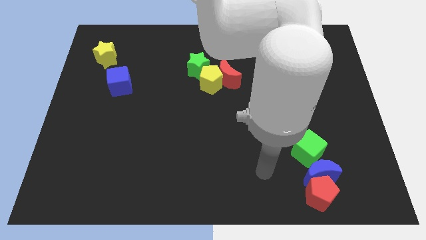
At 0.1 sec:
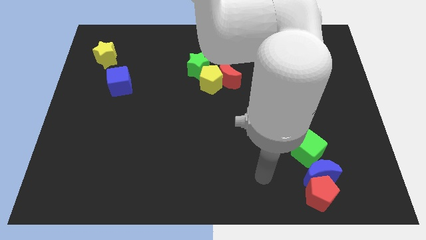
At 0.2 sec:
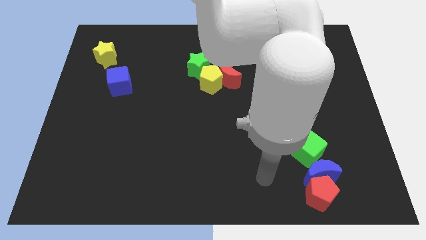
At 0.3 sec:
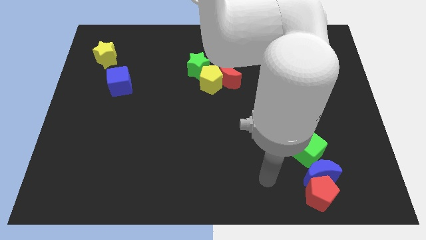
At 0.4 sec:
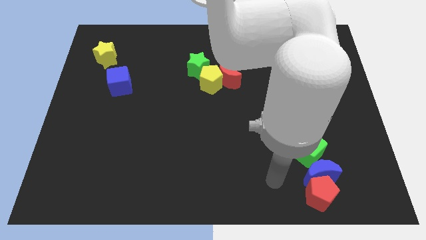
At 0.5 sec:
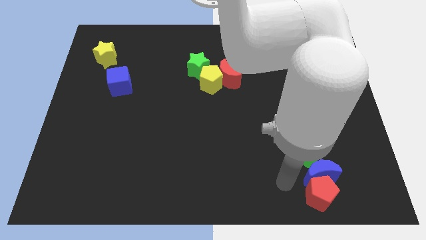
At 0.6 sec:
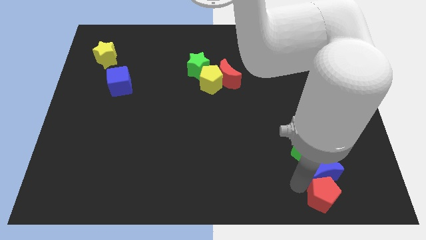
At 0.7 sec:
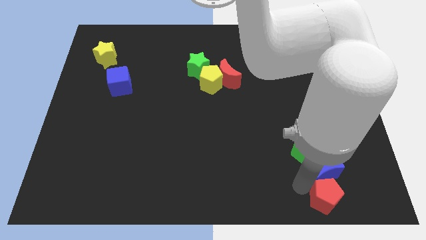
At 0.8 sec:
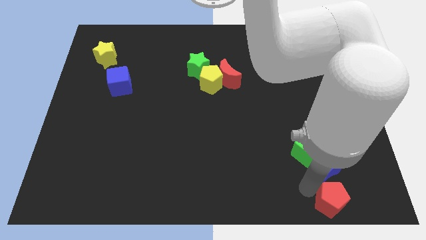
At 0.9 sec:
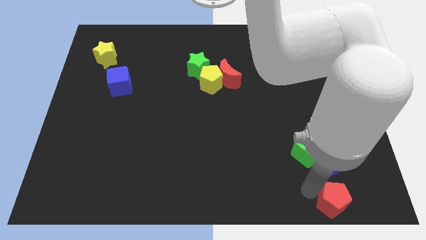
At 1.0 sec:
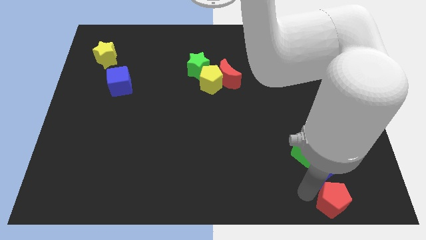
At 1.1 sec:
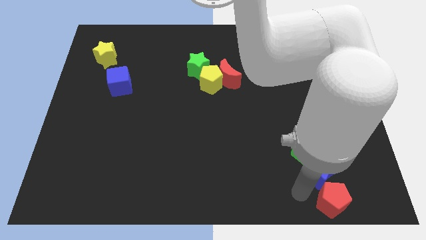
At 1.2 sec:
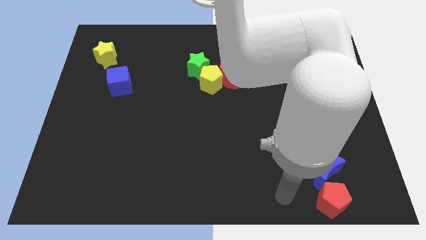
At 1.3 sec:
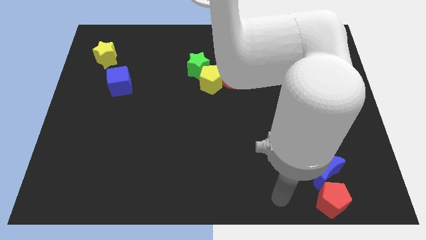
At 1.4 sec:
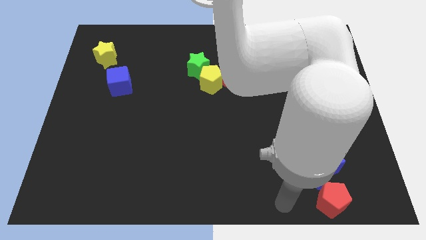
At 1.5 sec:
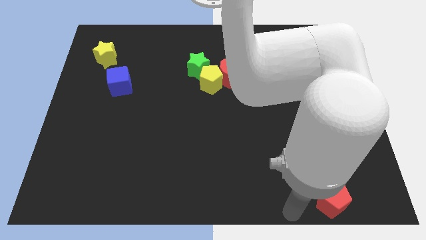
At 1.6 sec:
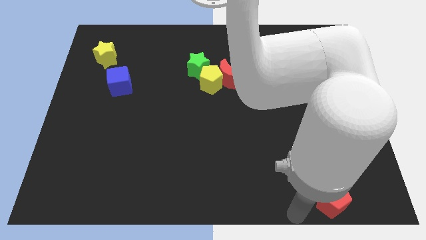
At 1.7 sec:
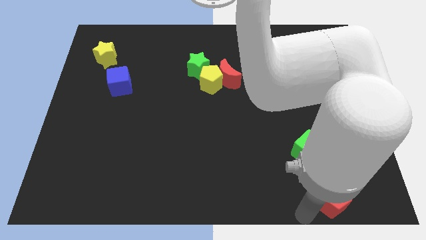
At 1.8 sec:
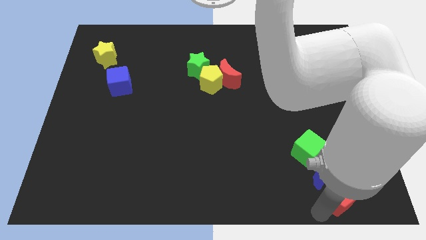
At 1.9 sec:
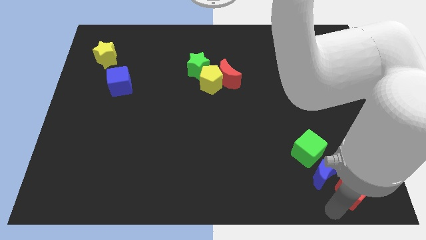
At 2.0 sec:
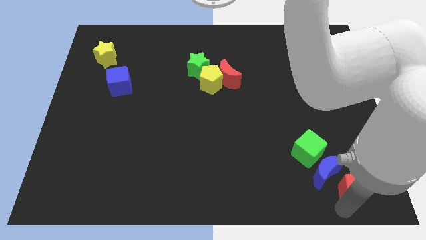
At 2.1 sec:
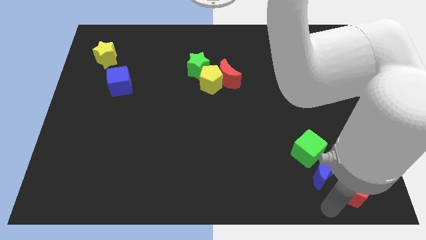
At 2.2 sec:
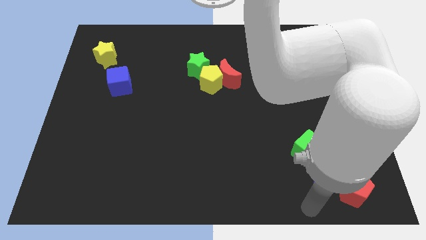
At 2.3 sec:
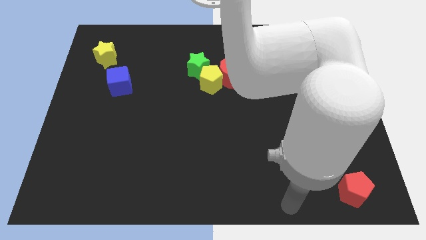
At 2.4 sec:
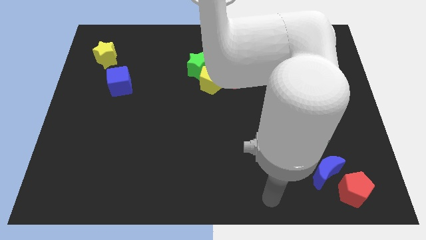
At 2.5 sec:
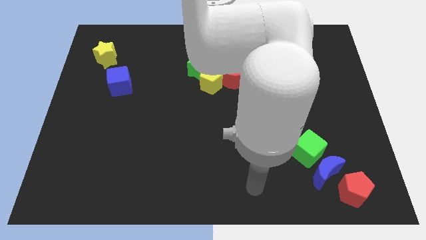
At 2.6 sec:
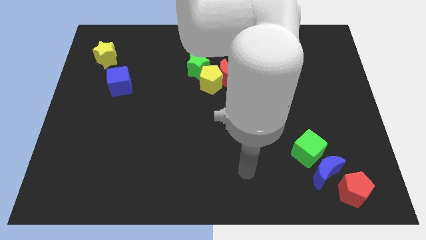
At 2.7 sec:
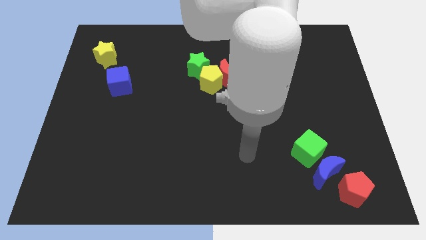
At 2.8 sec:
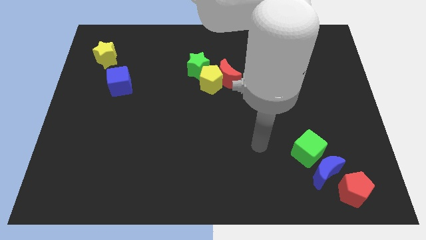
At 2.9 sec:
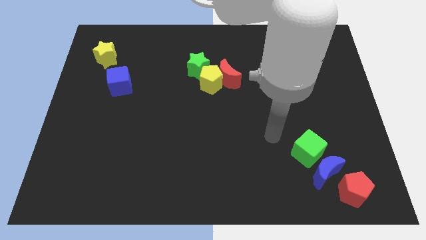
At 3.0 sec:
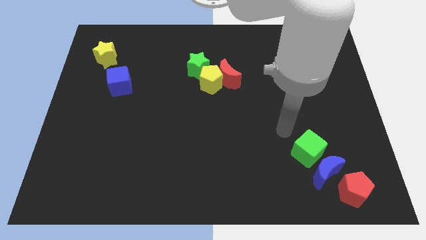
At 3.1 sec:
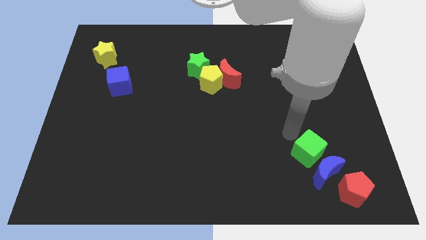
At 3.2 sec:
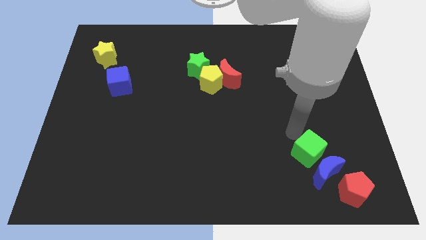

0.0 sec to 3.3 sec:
move the red pentagon to the bottom right of the blue crescent

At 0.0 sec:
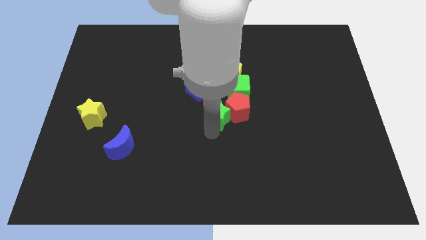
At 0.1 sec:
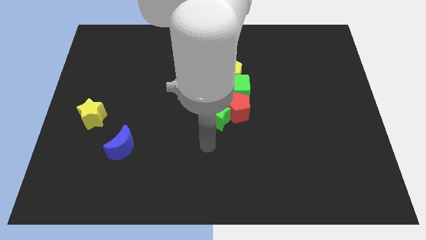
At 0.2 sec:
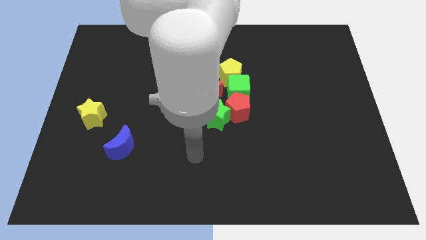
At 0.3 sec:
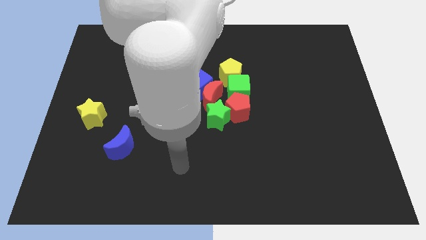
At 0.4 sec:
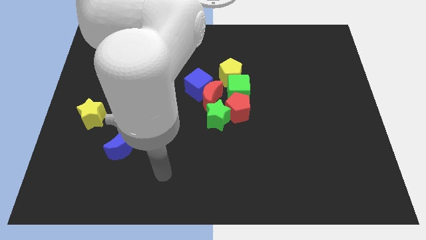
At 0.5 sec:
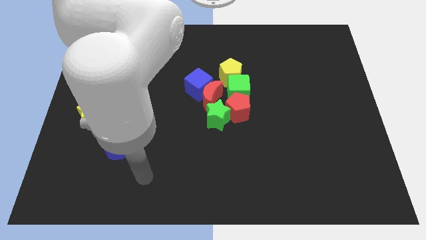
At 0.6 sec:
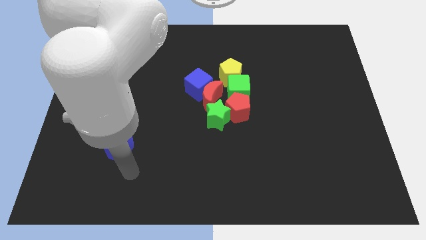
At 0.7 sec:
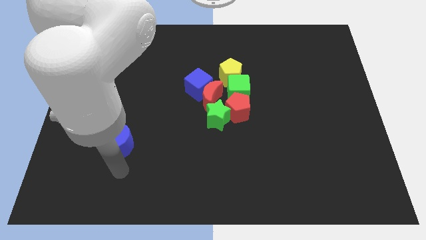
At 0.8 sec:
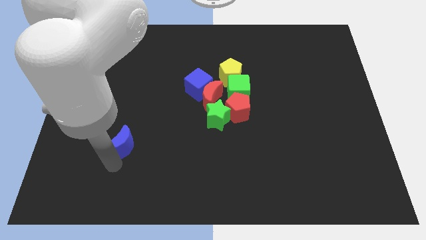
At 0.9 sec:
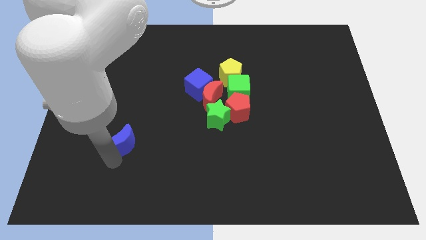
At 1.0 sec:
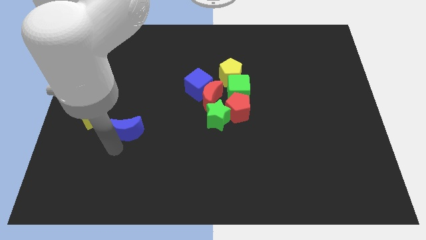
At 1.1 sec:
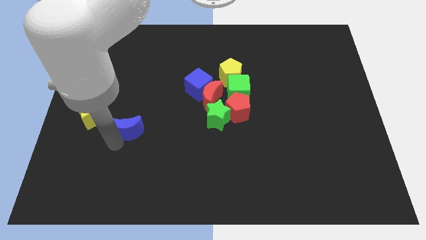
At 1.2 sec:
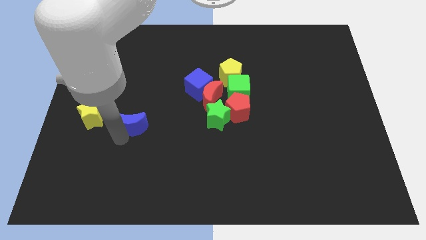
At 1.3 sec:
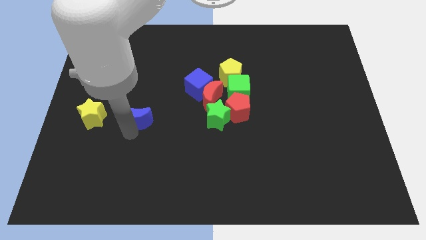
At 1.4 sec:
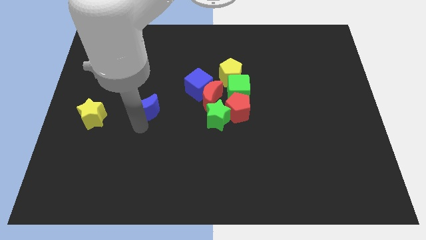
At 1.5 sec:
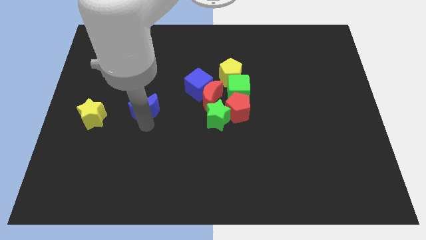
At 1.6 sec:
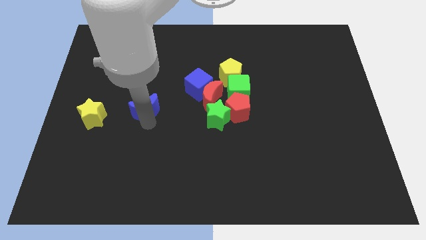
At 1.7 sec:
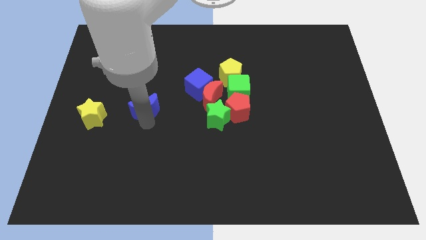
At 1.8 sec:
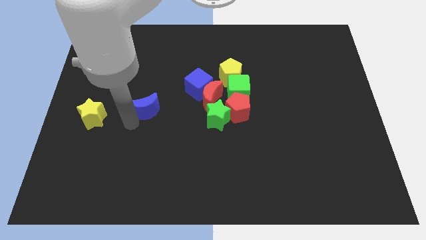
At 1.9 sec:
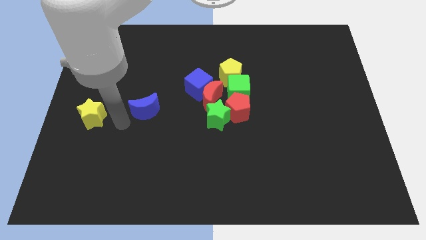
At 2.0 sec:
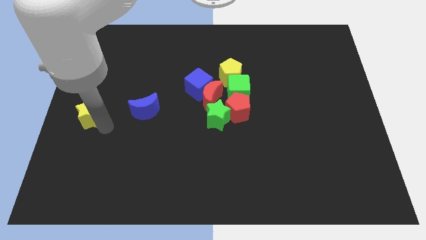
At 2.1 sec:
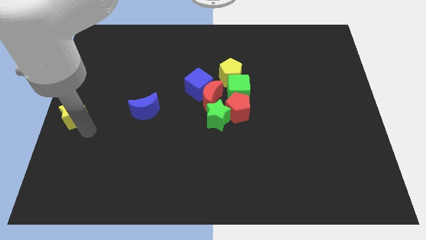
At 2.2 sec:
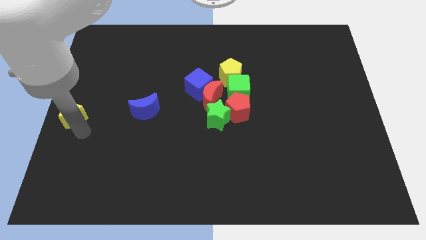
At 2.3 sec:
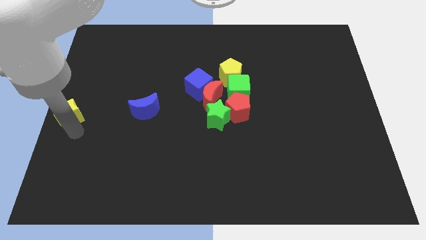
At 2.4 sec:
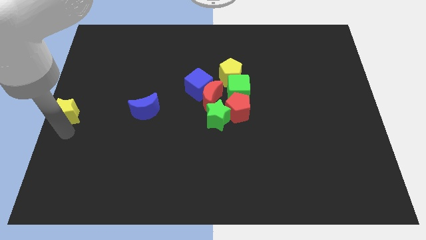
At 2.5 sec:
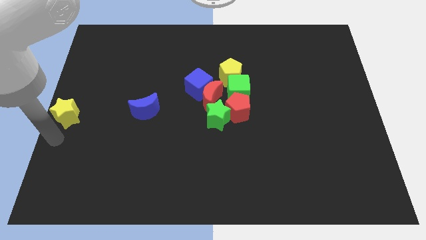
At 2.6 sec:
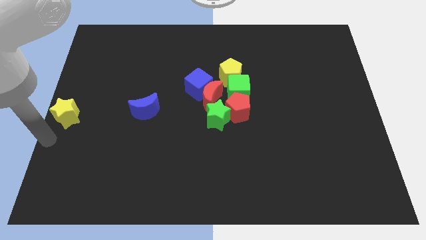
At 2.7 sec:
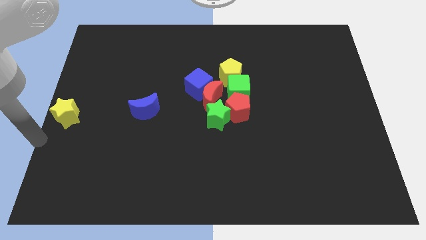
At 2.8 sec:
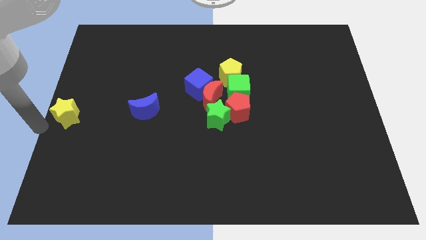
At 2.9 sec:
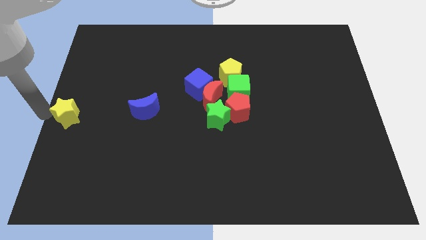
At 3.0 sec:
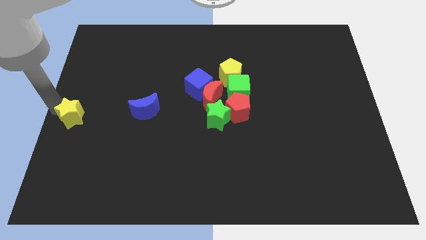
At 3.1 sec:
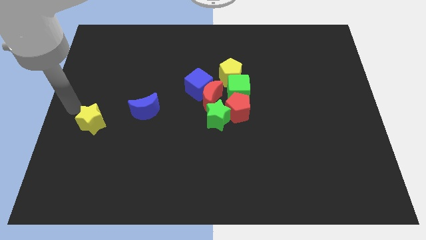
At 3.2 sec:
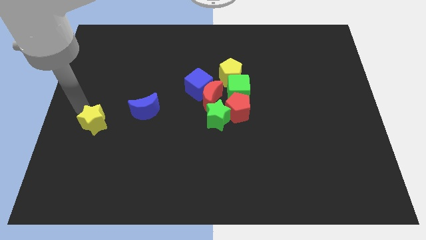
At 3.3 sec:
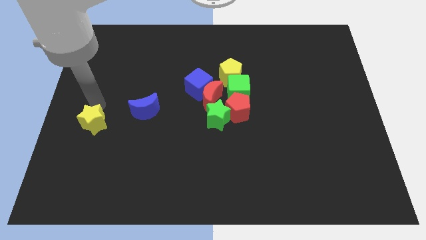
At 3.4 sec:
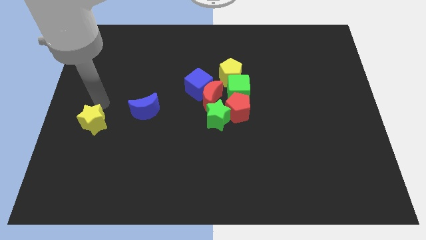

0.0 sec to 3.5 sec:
move the blue crescent and yellow star parallel to left of blue cube

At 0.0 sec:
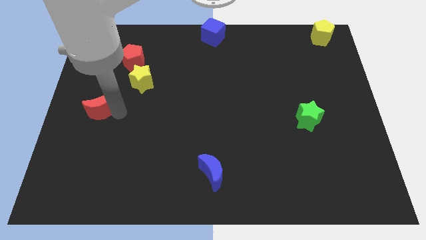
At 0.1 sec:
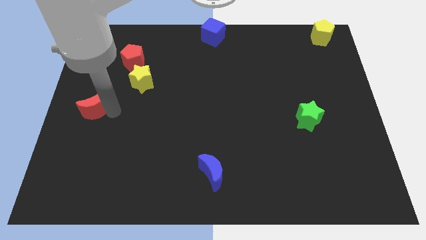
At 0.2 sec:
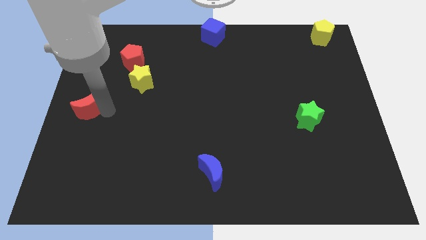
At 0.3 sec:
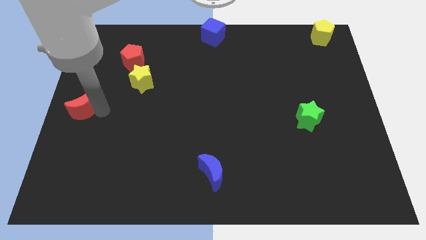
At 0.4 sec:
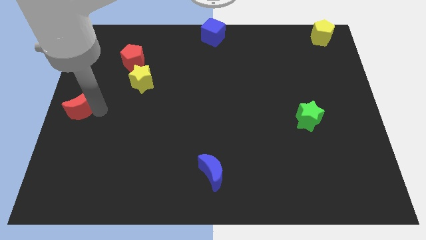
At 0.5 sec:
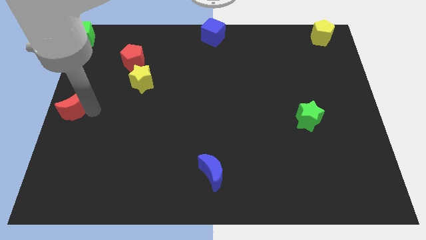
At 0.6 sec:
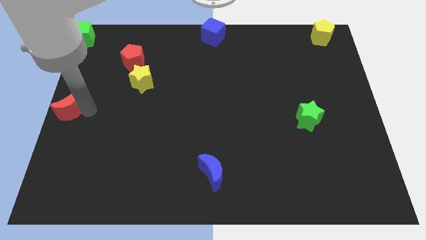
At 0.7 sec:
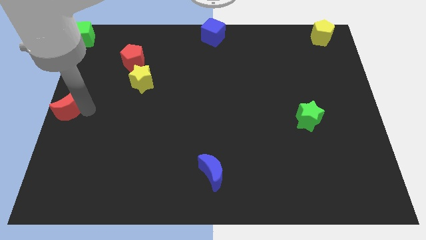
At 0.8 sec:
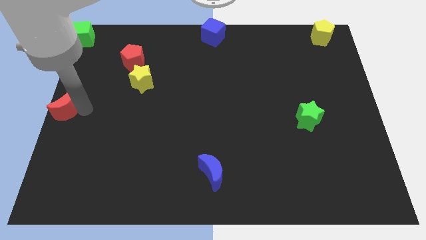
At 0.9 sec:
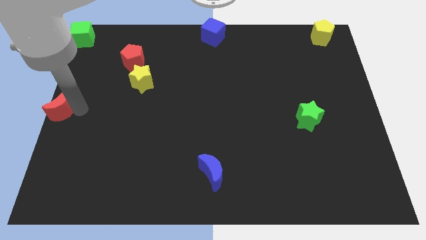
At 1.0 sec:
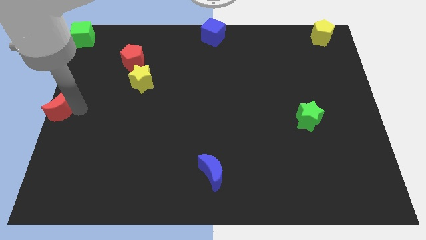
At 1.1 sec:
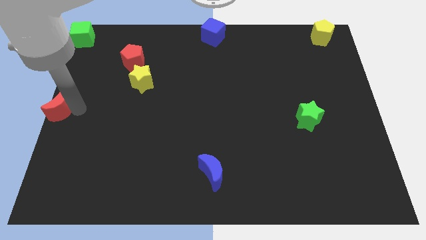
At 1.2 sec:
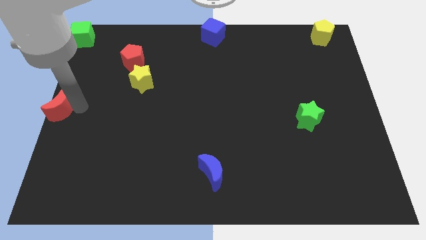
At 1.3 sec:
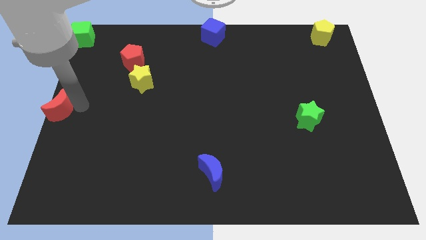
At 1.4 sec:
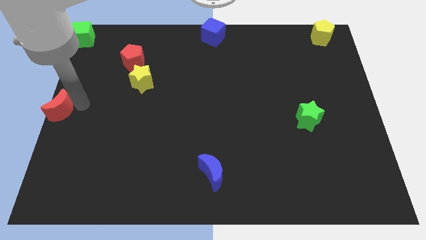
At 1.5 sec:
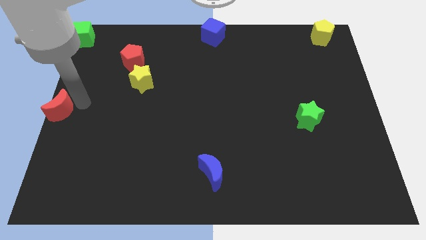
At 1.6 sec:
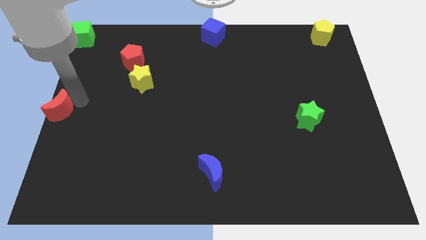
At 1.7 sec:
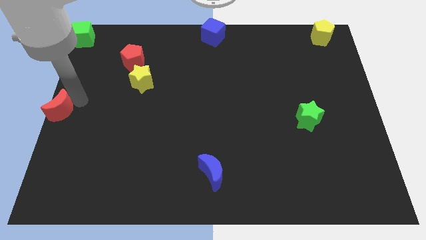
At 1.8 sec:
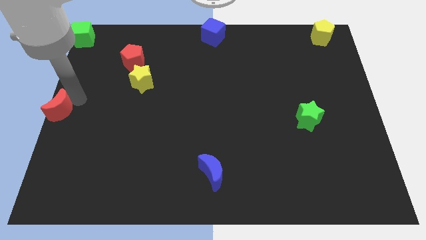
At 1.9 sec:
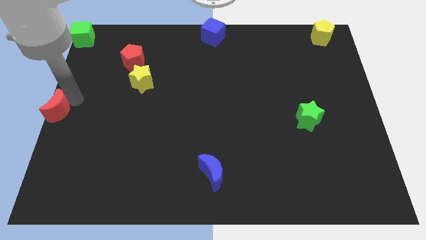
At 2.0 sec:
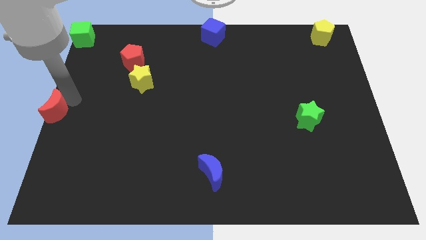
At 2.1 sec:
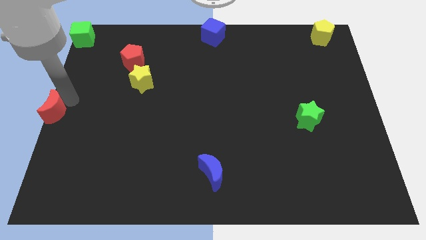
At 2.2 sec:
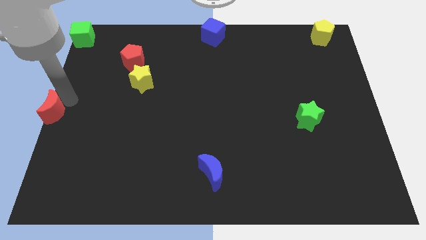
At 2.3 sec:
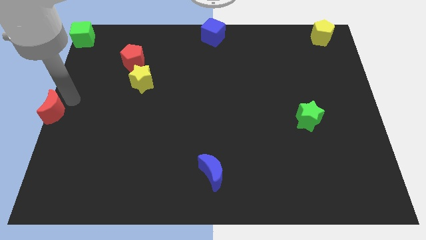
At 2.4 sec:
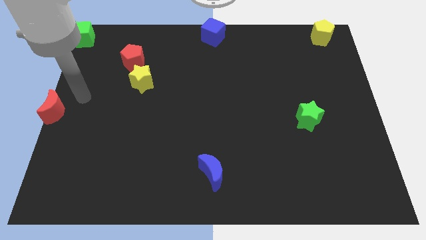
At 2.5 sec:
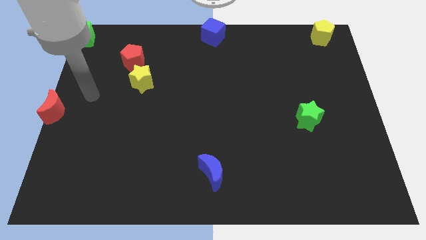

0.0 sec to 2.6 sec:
move the red crecent to the center left of the board
